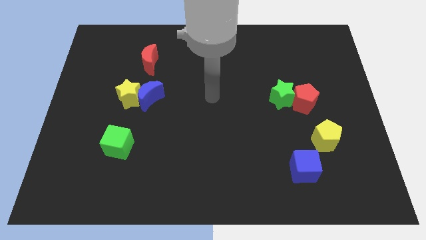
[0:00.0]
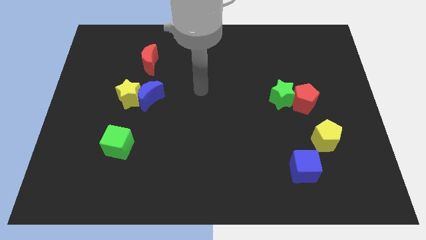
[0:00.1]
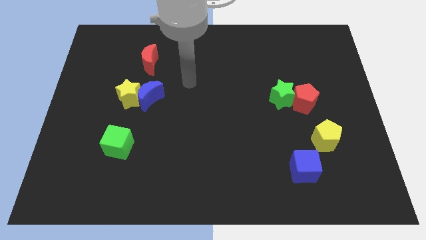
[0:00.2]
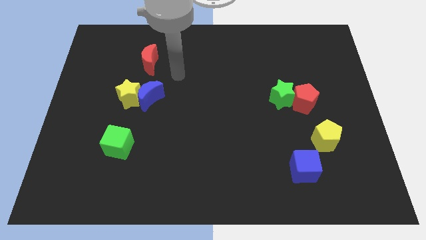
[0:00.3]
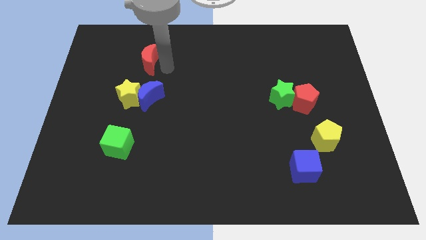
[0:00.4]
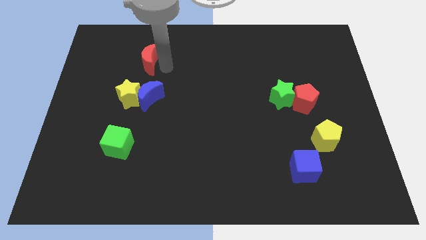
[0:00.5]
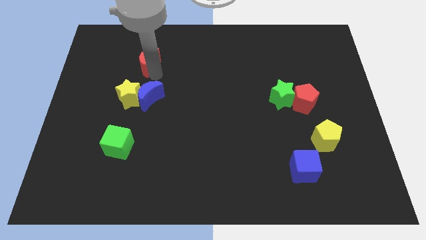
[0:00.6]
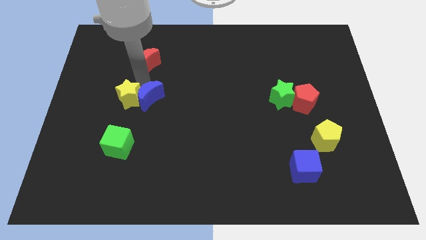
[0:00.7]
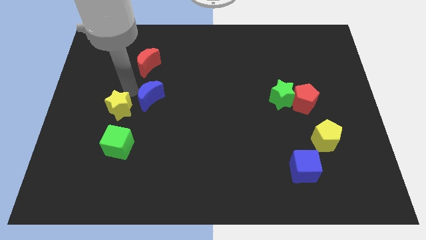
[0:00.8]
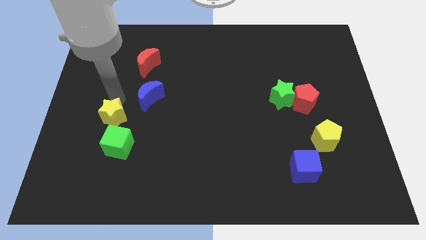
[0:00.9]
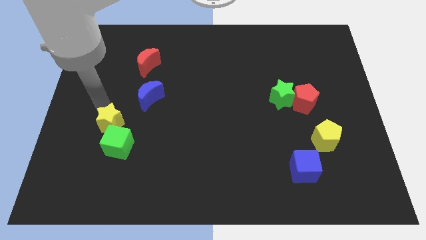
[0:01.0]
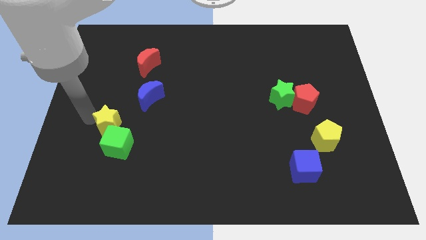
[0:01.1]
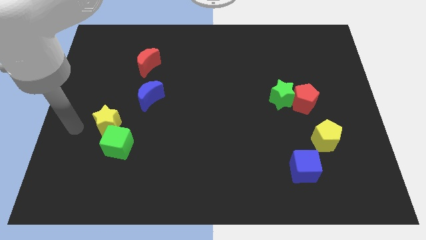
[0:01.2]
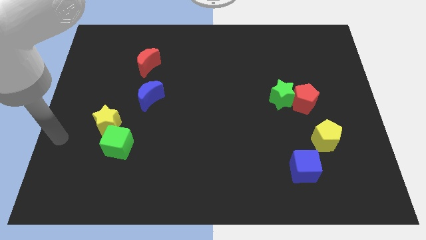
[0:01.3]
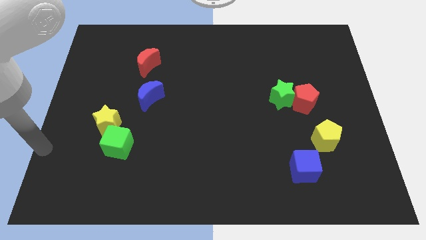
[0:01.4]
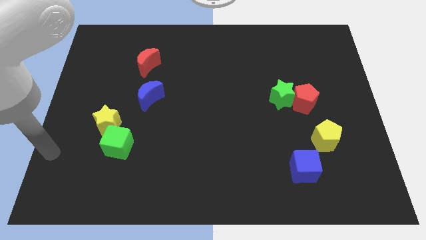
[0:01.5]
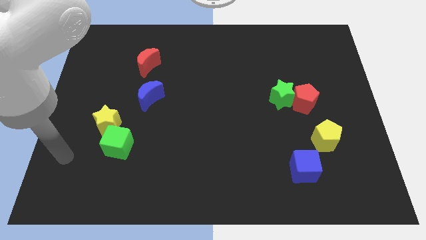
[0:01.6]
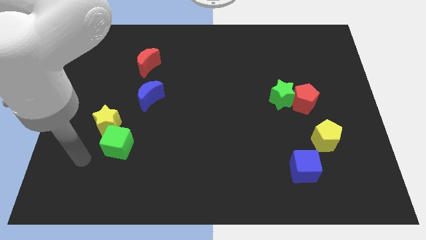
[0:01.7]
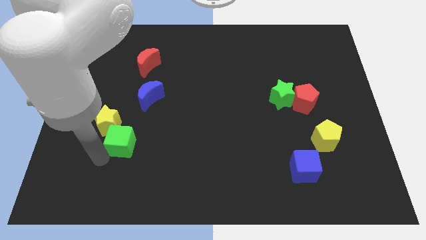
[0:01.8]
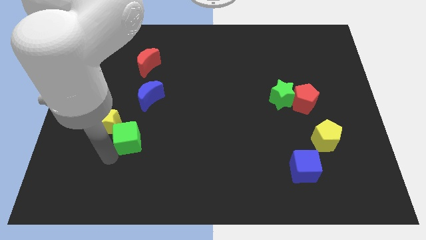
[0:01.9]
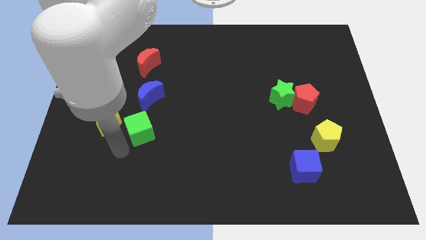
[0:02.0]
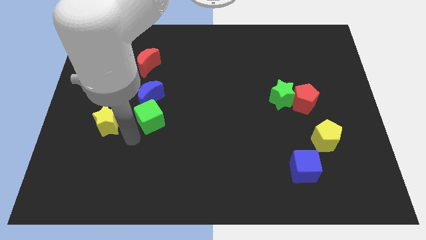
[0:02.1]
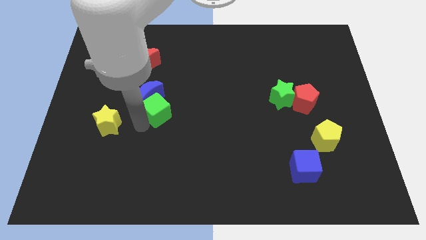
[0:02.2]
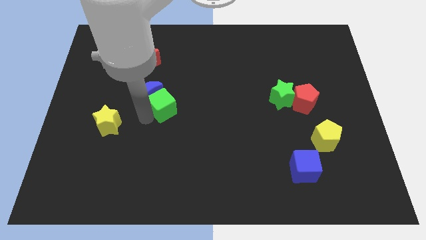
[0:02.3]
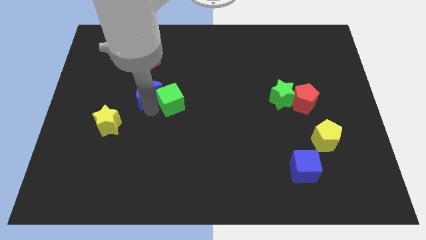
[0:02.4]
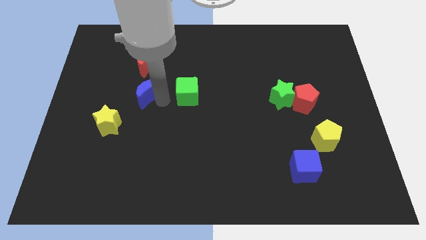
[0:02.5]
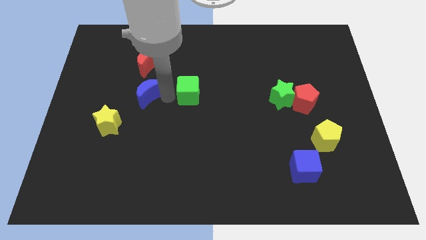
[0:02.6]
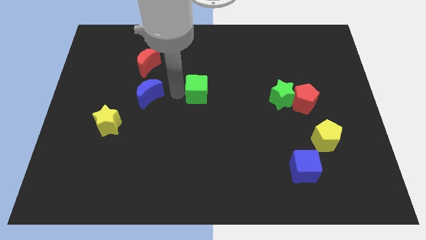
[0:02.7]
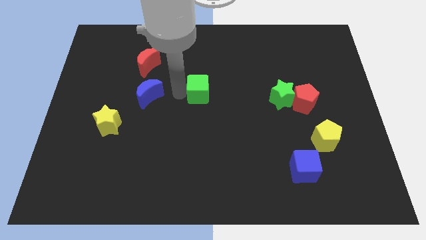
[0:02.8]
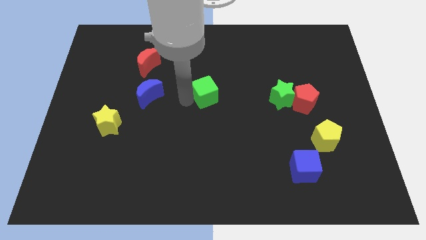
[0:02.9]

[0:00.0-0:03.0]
move the green cube to the center of the board

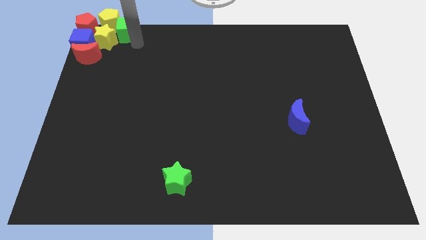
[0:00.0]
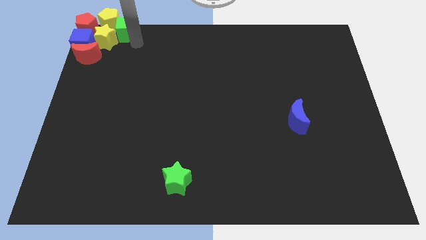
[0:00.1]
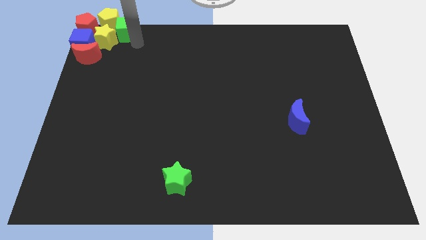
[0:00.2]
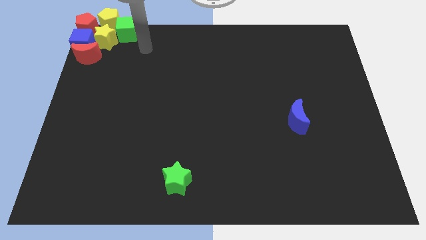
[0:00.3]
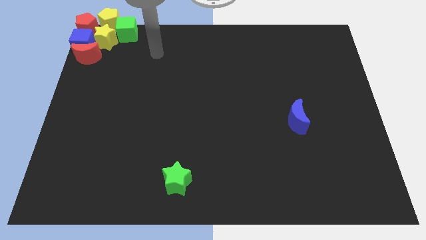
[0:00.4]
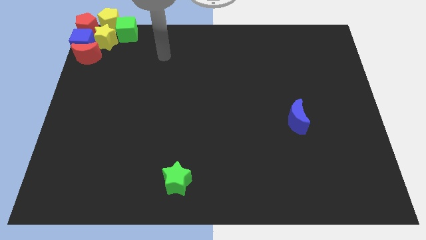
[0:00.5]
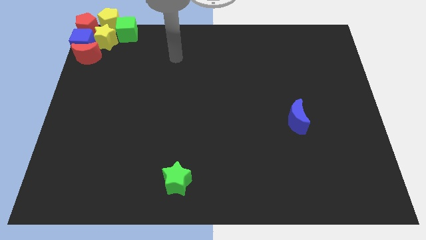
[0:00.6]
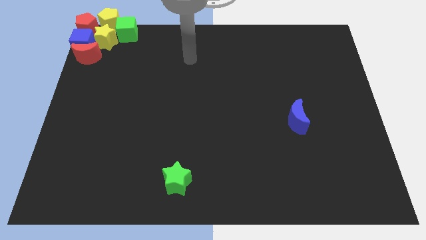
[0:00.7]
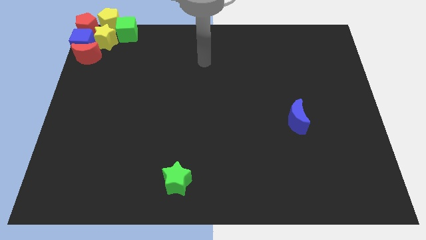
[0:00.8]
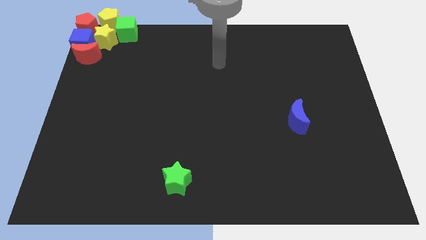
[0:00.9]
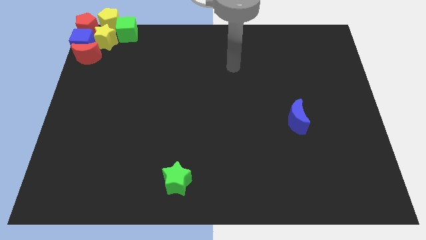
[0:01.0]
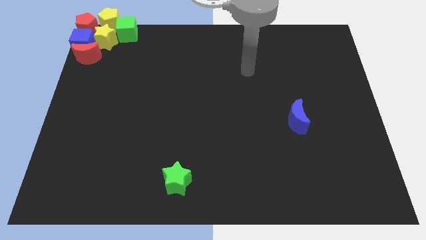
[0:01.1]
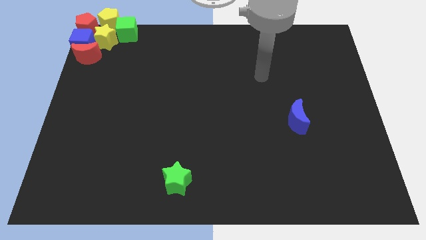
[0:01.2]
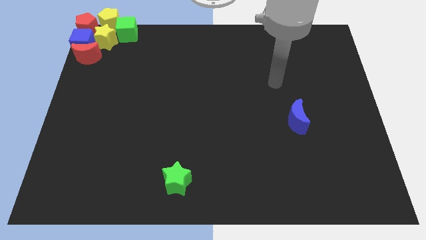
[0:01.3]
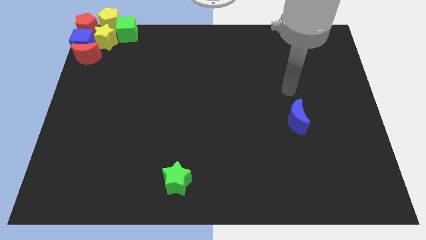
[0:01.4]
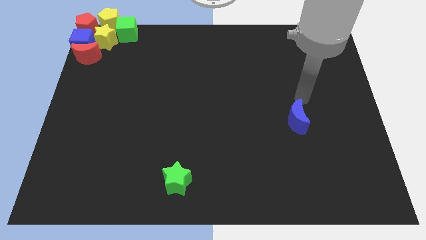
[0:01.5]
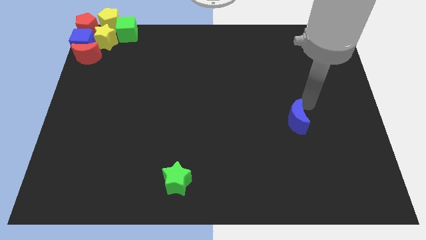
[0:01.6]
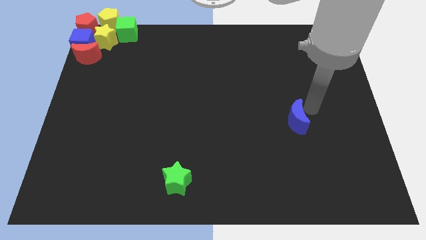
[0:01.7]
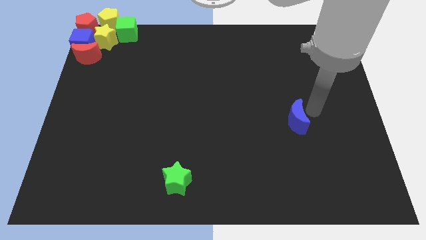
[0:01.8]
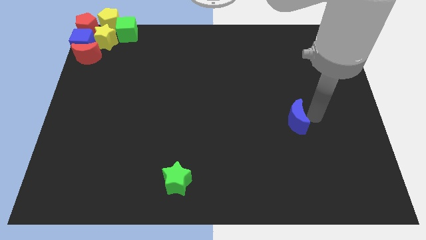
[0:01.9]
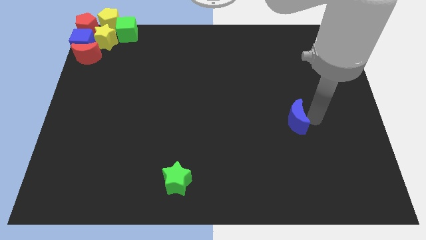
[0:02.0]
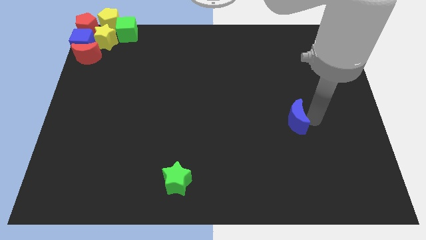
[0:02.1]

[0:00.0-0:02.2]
place the arm right to the blue moon

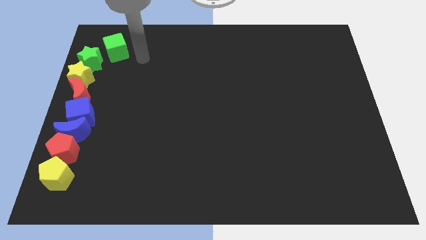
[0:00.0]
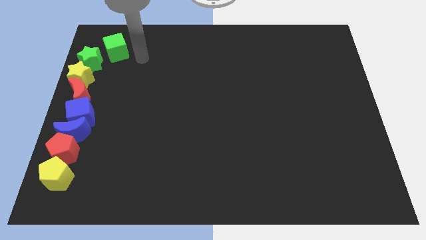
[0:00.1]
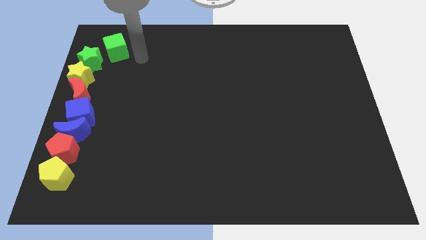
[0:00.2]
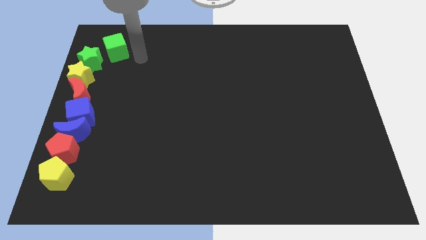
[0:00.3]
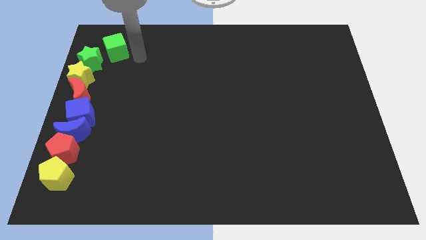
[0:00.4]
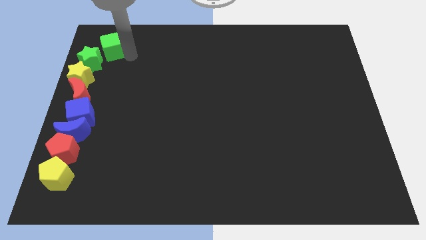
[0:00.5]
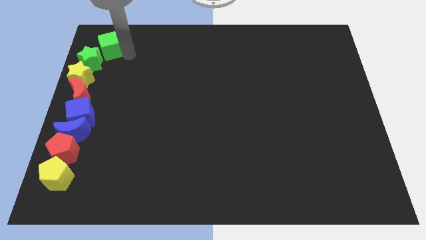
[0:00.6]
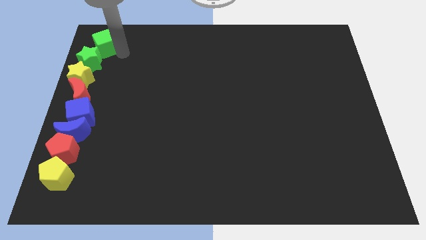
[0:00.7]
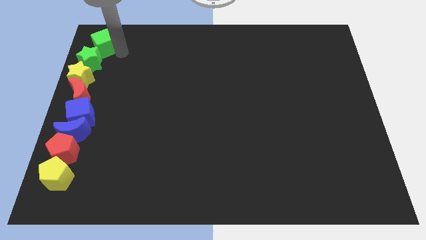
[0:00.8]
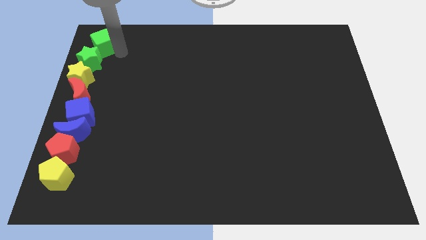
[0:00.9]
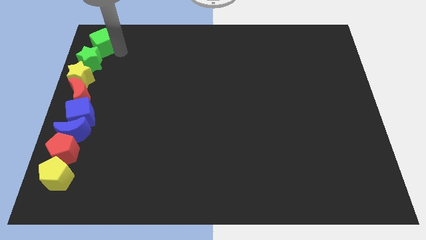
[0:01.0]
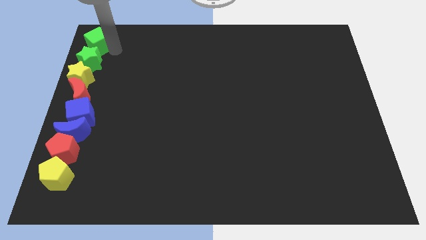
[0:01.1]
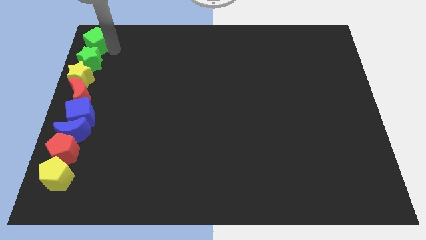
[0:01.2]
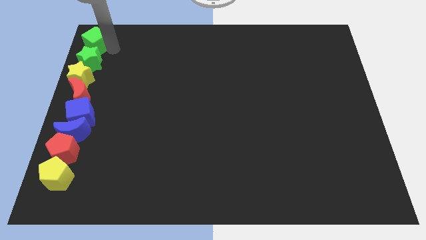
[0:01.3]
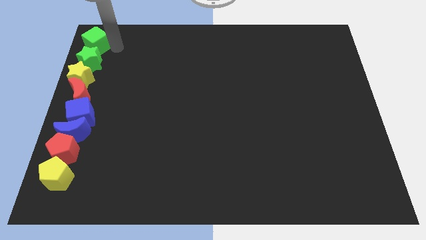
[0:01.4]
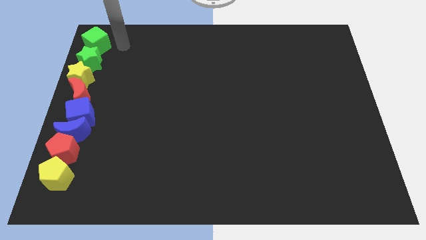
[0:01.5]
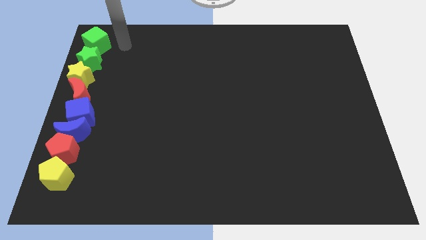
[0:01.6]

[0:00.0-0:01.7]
drag green cube above green star

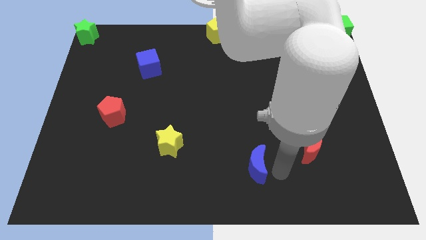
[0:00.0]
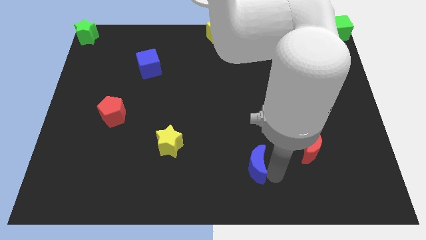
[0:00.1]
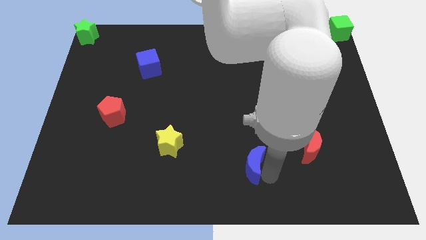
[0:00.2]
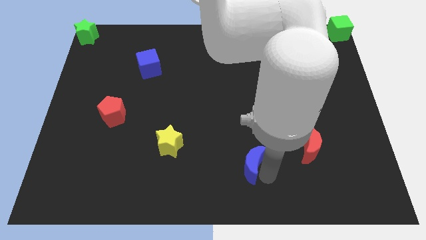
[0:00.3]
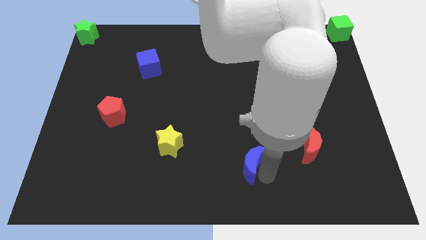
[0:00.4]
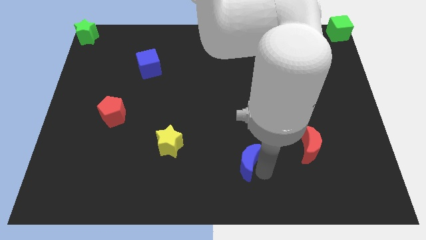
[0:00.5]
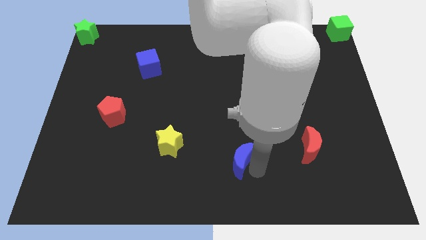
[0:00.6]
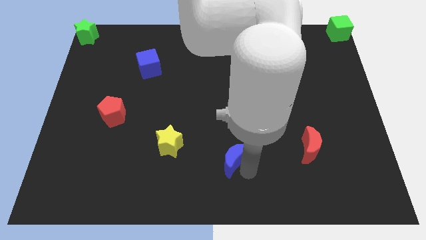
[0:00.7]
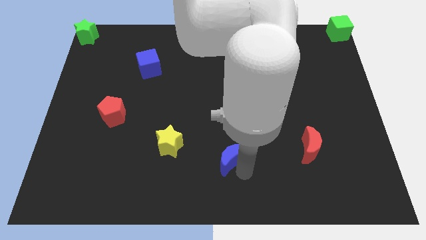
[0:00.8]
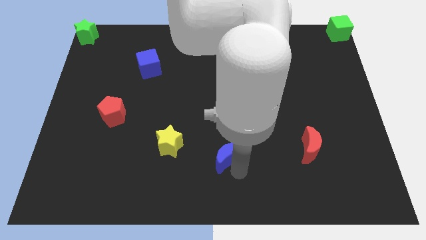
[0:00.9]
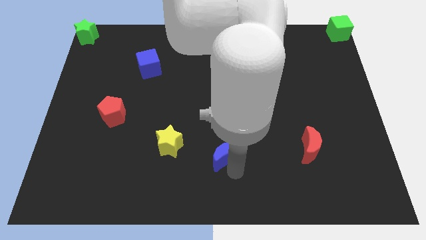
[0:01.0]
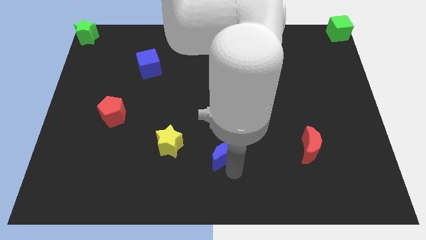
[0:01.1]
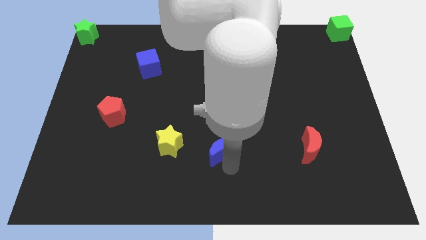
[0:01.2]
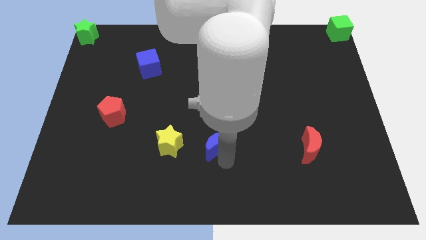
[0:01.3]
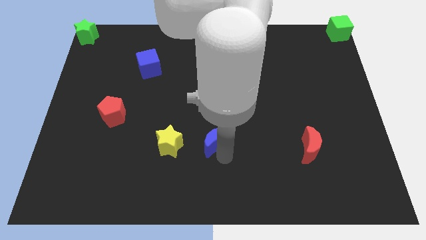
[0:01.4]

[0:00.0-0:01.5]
move the blue crescent to the left of the board

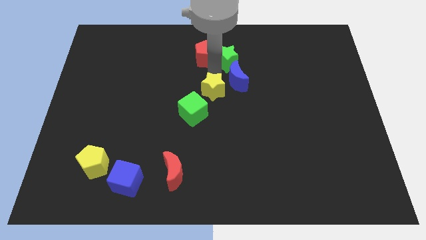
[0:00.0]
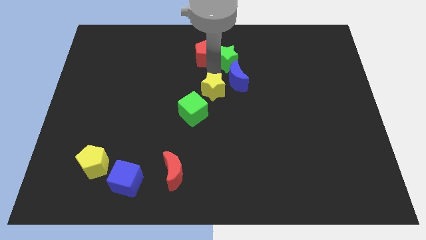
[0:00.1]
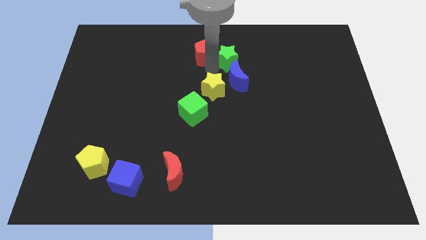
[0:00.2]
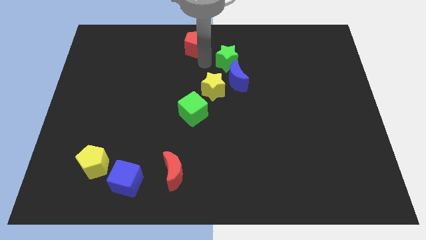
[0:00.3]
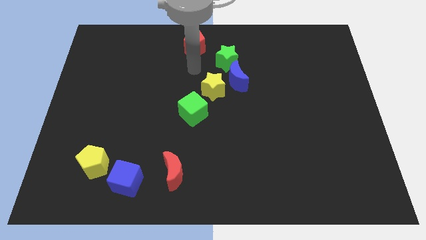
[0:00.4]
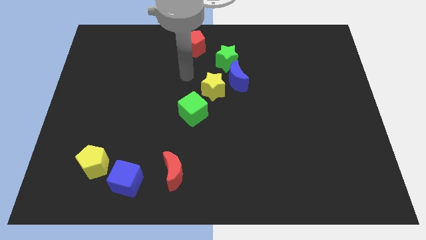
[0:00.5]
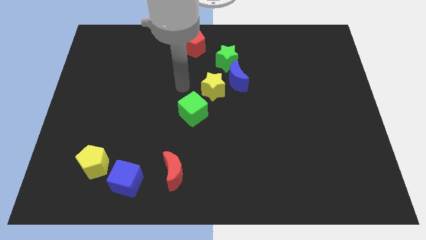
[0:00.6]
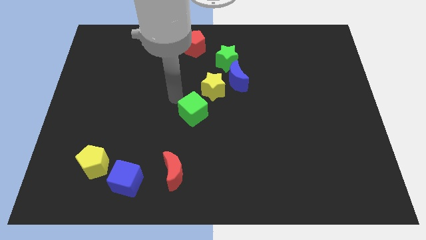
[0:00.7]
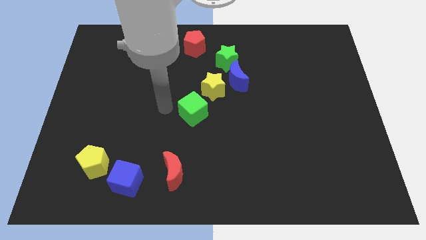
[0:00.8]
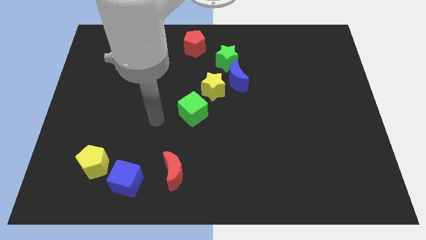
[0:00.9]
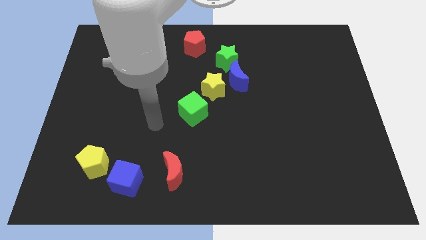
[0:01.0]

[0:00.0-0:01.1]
move red pentagon to the top cente rof the board
